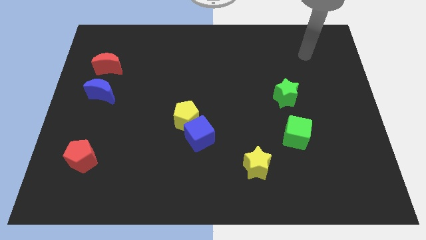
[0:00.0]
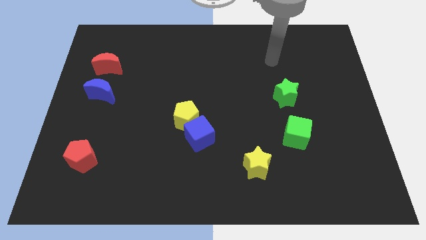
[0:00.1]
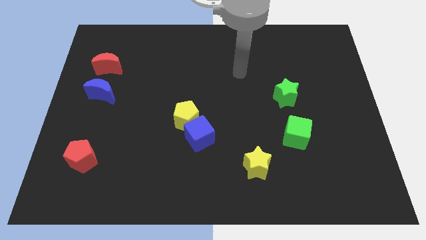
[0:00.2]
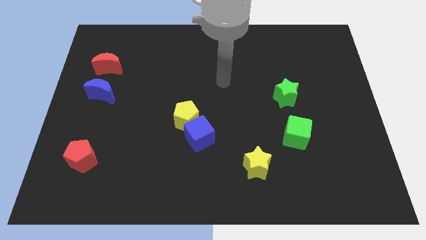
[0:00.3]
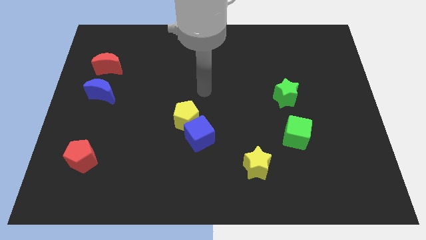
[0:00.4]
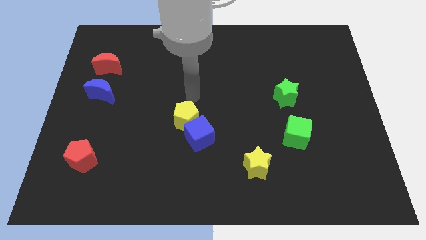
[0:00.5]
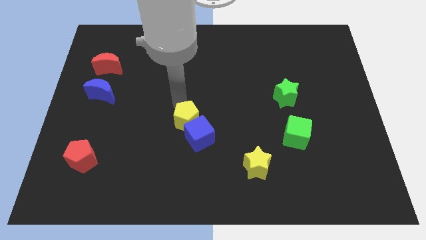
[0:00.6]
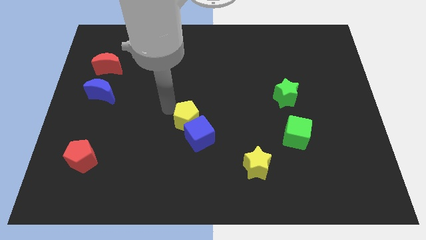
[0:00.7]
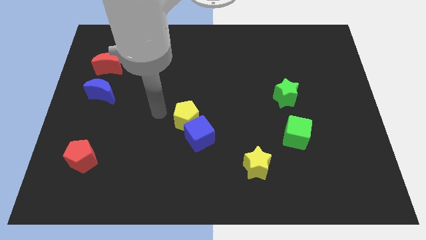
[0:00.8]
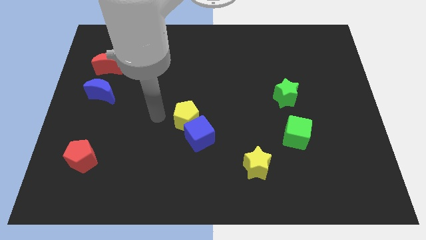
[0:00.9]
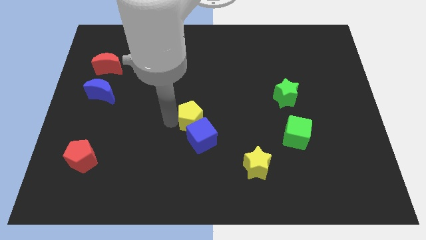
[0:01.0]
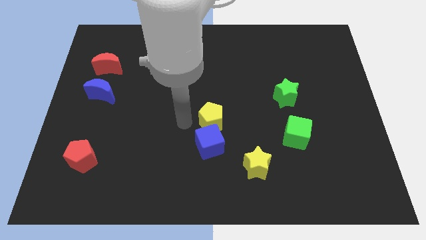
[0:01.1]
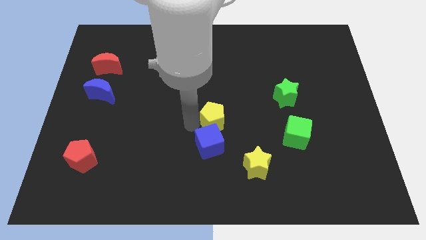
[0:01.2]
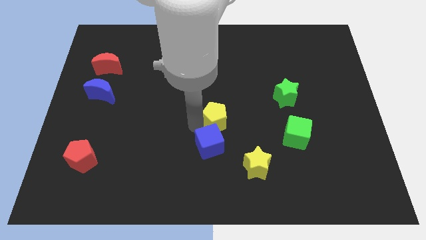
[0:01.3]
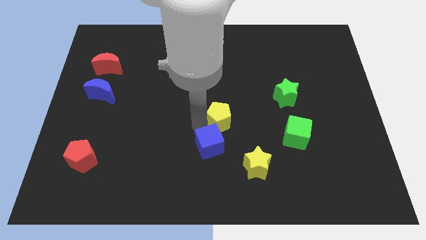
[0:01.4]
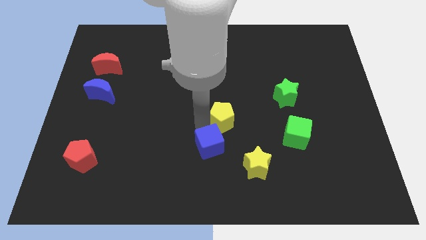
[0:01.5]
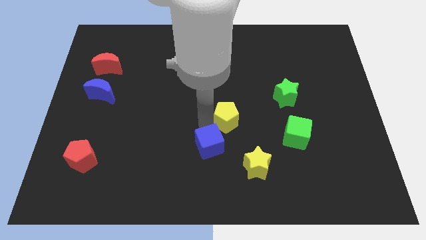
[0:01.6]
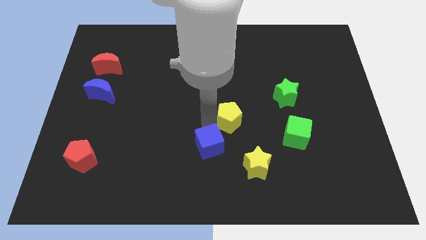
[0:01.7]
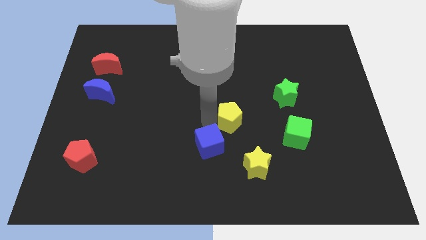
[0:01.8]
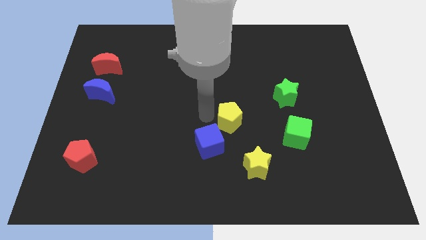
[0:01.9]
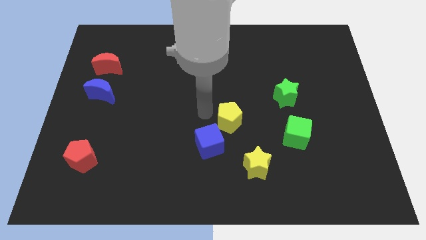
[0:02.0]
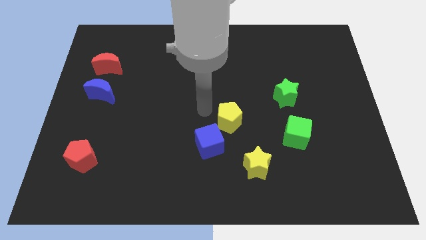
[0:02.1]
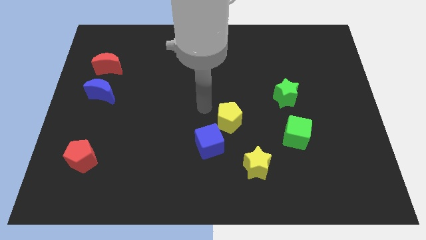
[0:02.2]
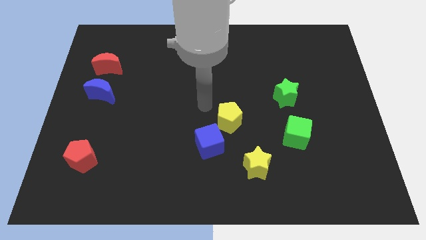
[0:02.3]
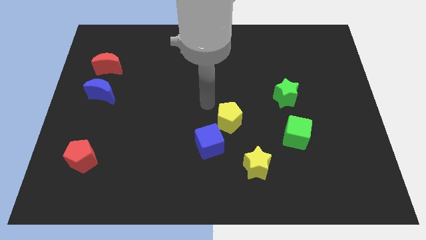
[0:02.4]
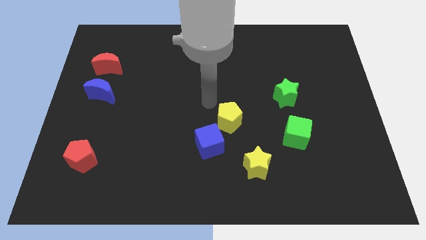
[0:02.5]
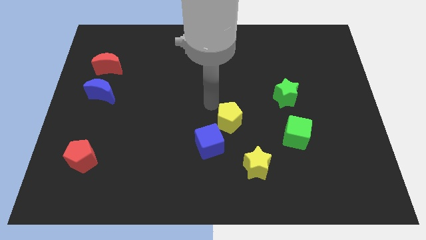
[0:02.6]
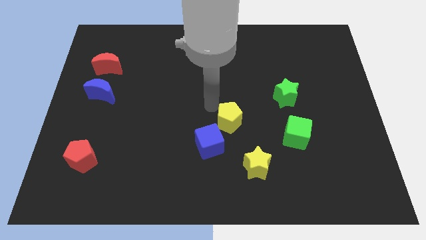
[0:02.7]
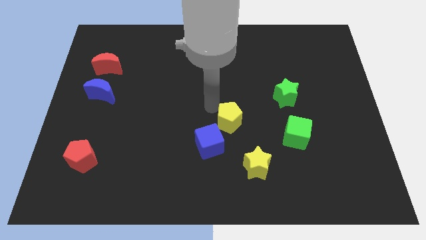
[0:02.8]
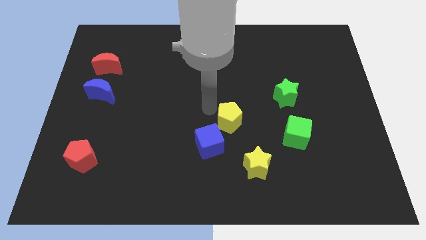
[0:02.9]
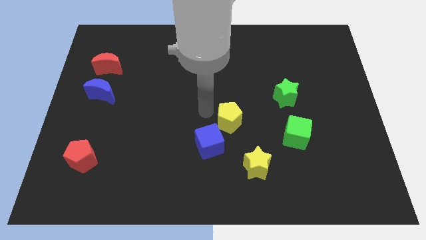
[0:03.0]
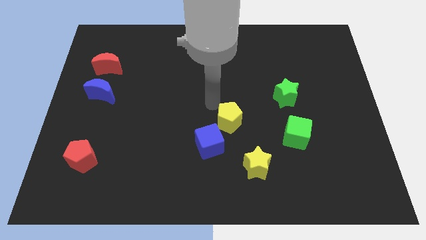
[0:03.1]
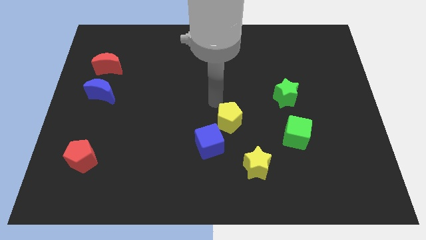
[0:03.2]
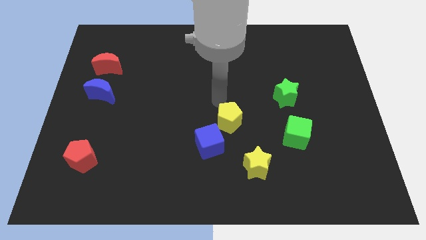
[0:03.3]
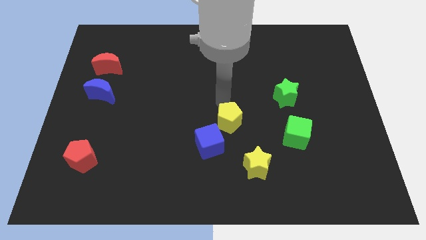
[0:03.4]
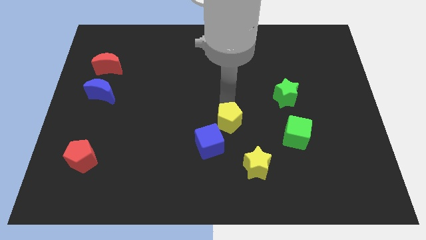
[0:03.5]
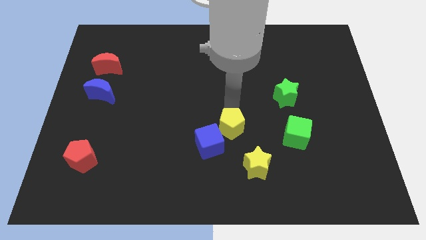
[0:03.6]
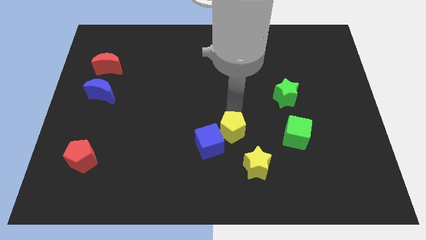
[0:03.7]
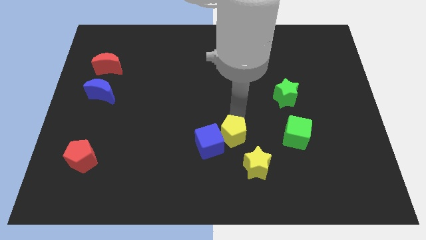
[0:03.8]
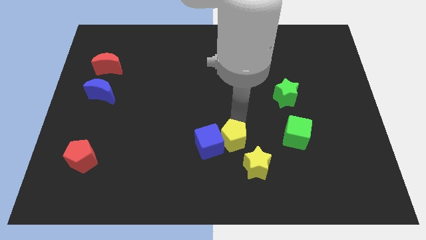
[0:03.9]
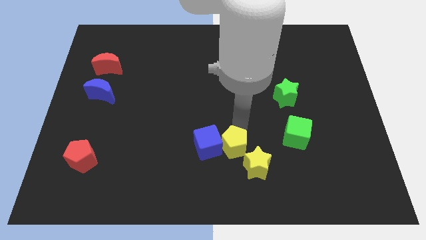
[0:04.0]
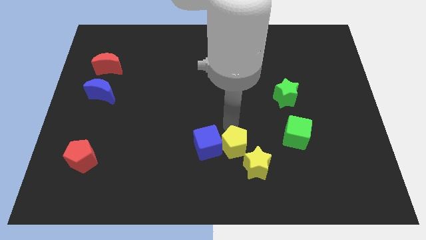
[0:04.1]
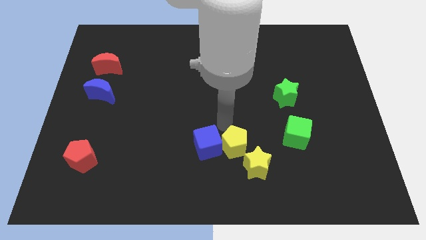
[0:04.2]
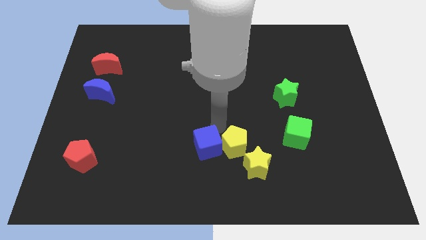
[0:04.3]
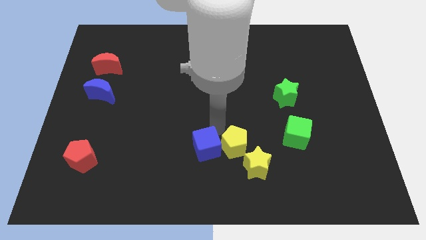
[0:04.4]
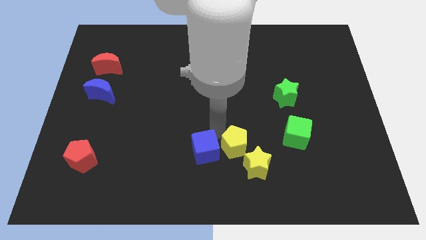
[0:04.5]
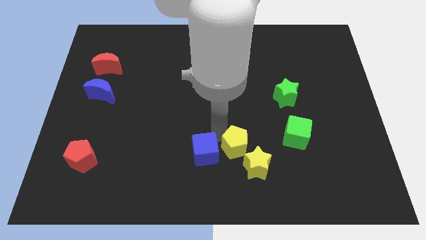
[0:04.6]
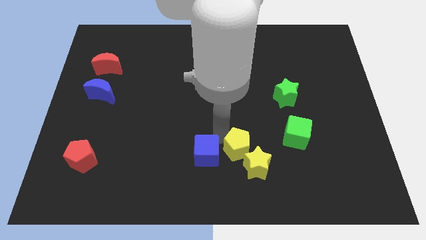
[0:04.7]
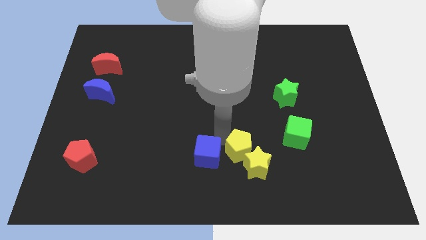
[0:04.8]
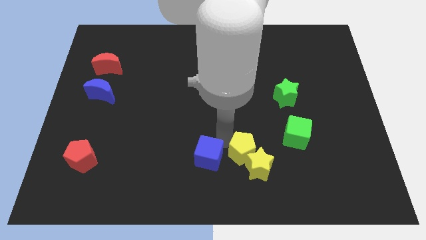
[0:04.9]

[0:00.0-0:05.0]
push the yellow pentagon next to the yellow star

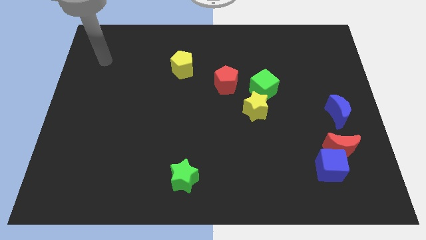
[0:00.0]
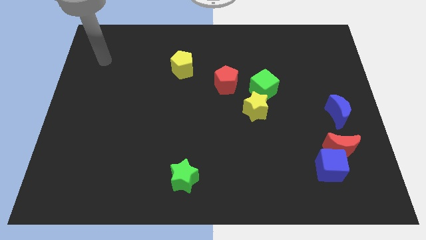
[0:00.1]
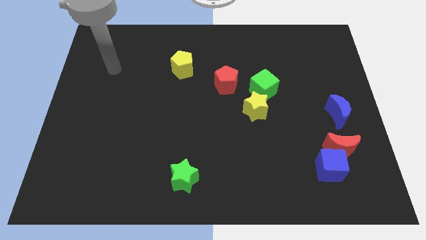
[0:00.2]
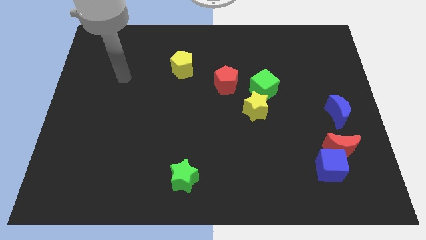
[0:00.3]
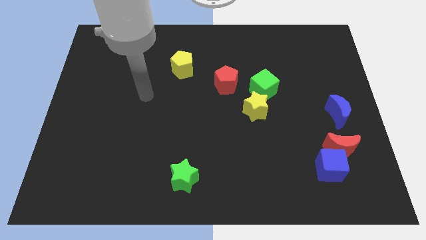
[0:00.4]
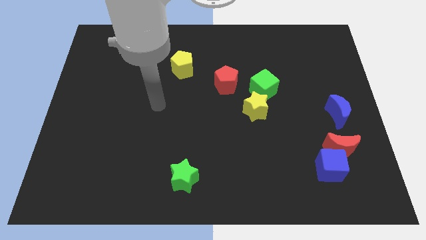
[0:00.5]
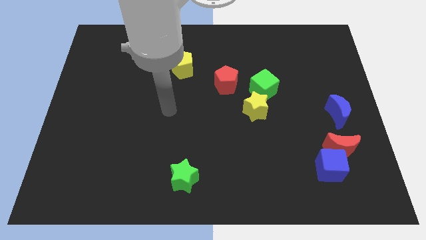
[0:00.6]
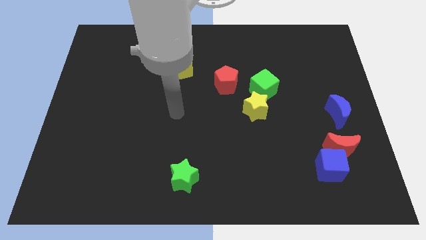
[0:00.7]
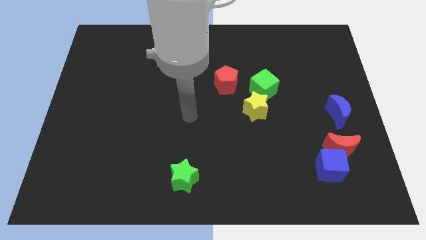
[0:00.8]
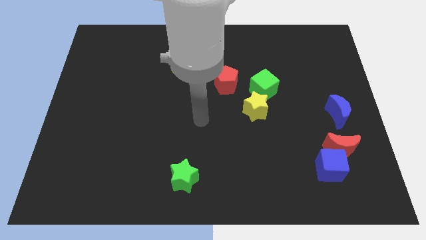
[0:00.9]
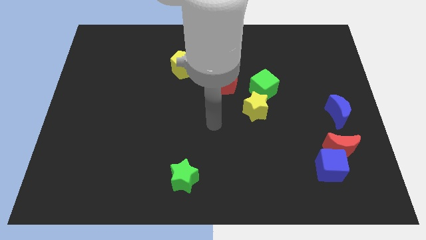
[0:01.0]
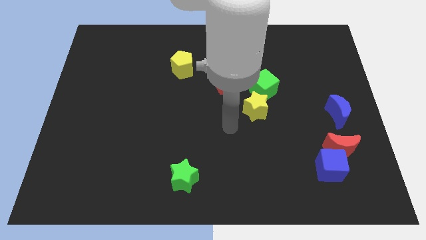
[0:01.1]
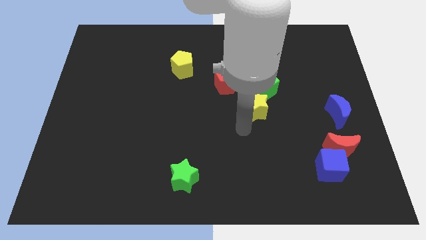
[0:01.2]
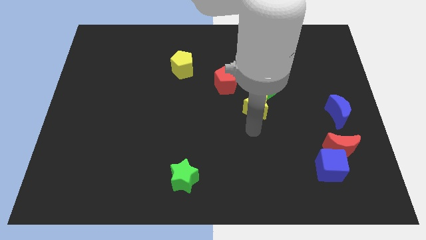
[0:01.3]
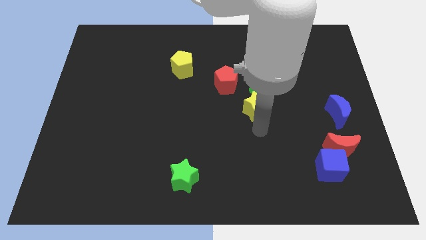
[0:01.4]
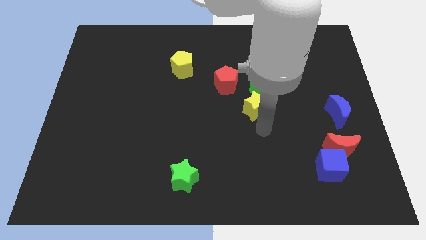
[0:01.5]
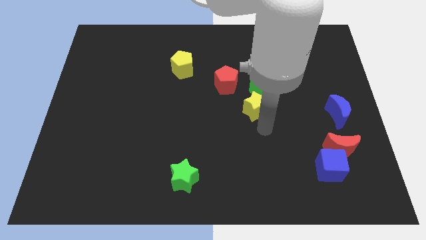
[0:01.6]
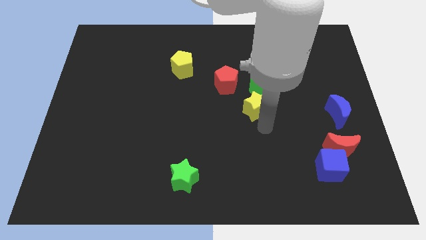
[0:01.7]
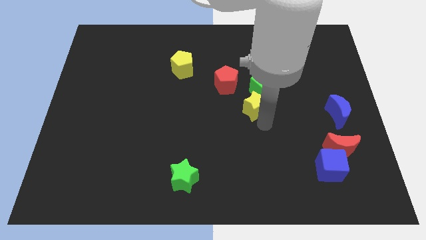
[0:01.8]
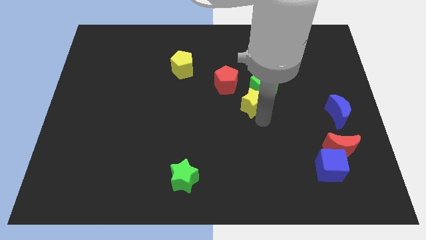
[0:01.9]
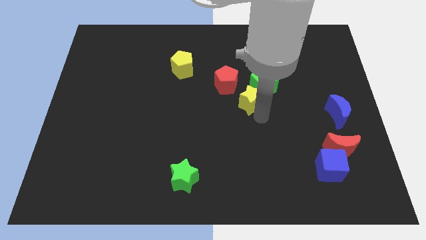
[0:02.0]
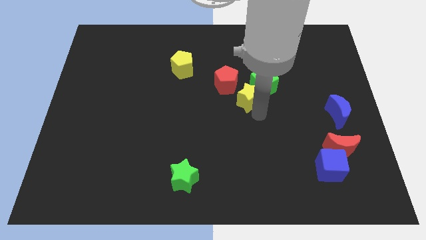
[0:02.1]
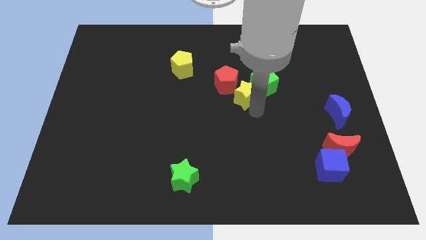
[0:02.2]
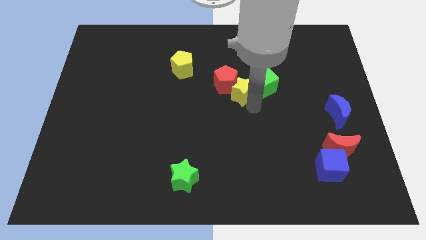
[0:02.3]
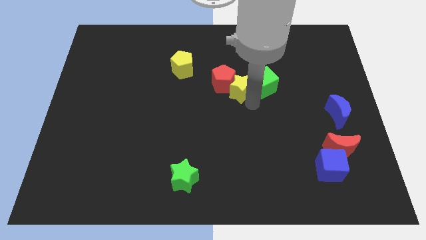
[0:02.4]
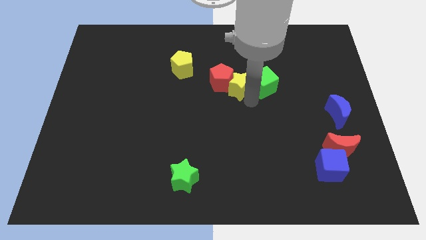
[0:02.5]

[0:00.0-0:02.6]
put the yellow star close to the red pentagon

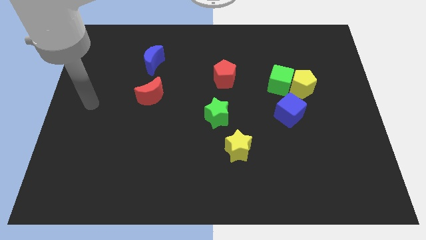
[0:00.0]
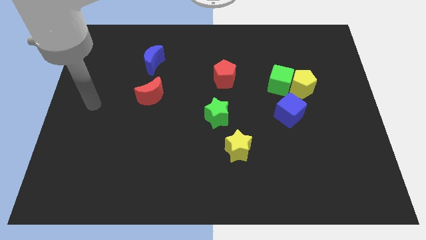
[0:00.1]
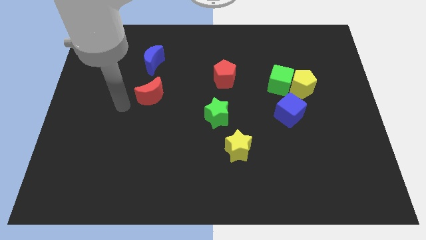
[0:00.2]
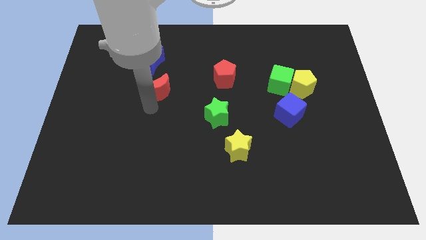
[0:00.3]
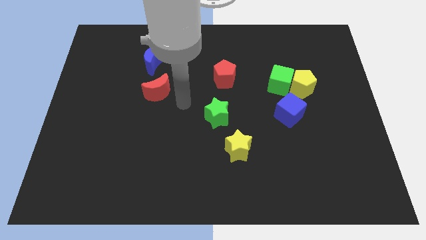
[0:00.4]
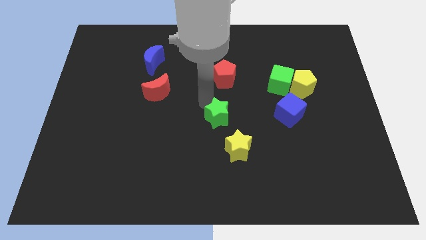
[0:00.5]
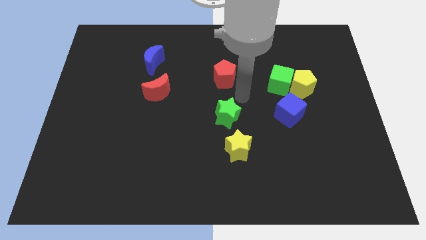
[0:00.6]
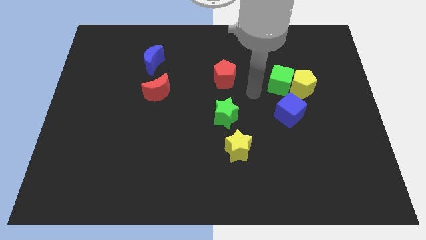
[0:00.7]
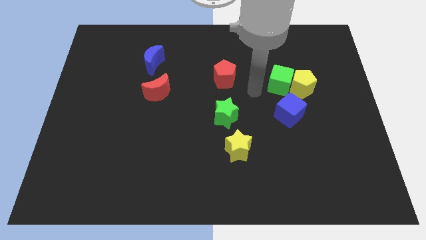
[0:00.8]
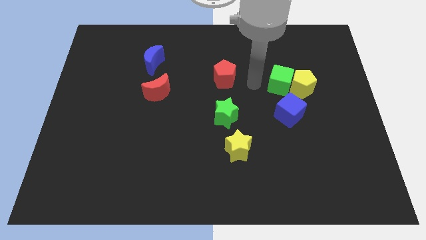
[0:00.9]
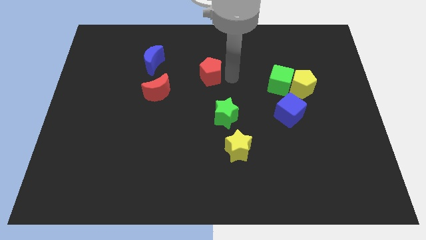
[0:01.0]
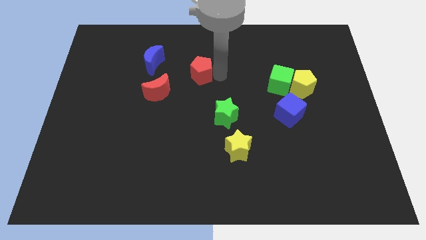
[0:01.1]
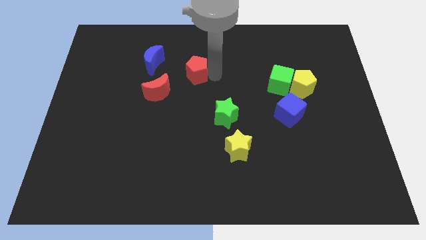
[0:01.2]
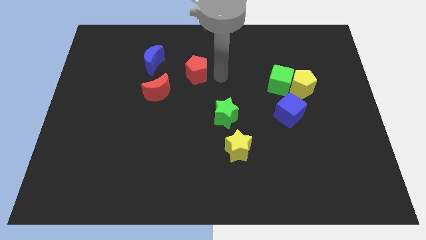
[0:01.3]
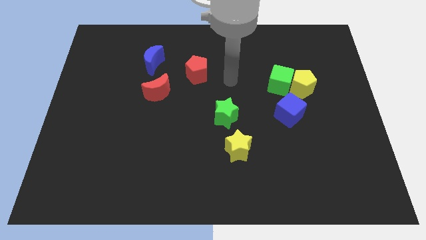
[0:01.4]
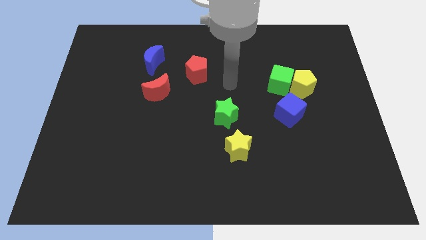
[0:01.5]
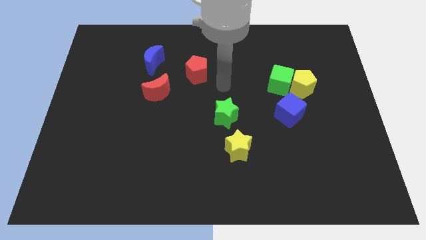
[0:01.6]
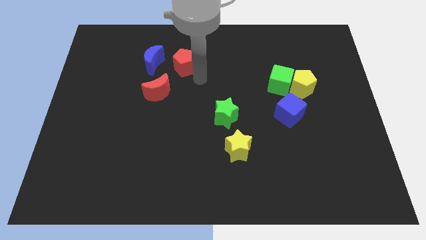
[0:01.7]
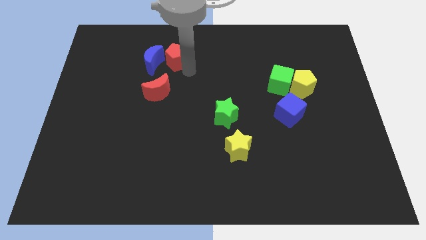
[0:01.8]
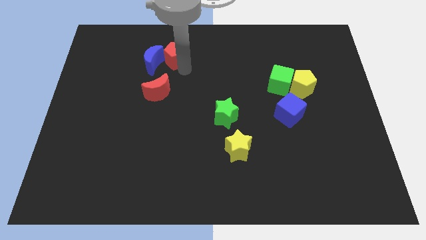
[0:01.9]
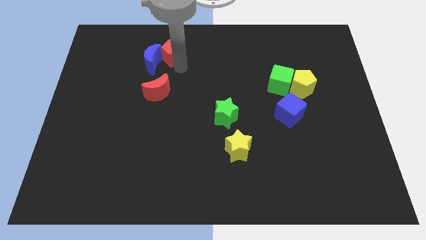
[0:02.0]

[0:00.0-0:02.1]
move the red pentagon to the blue moon
